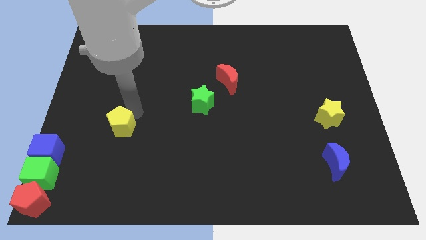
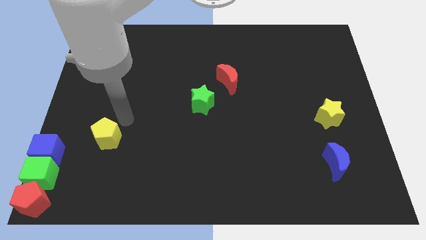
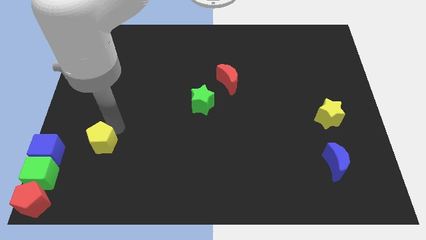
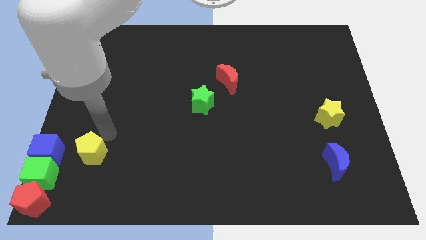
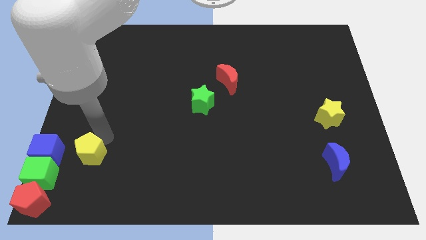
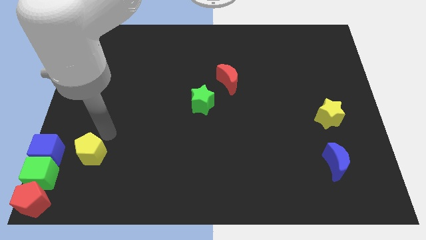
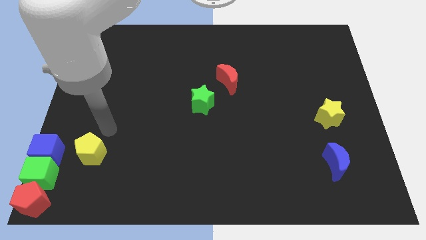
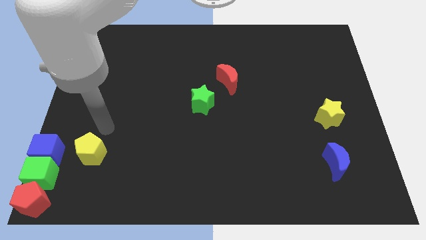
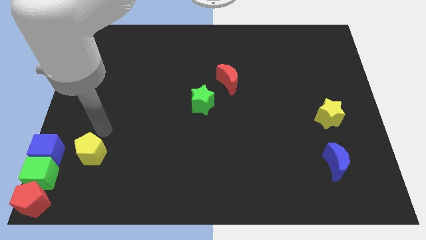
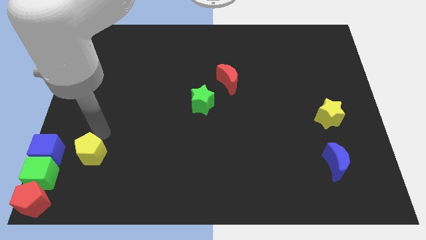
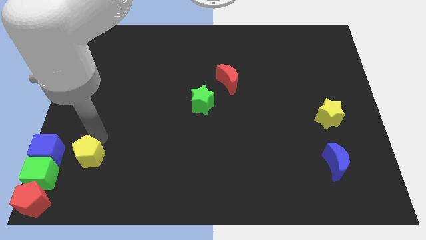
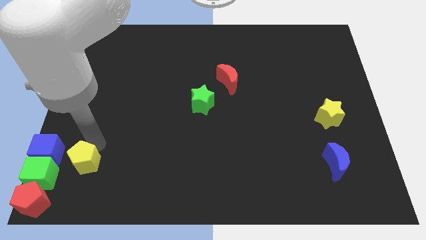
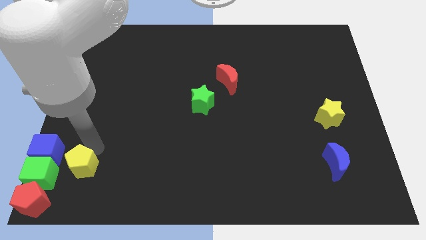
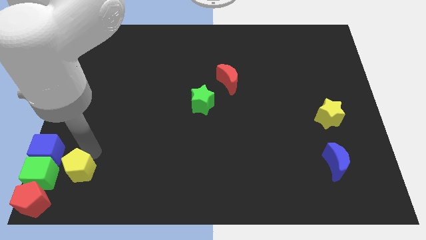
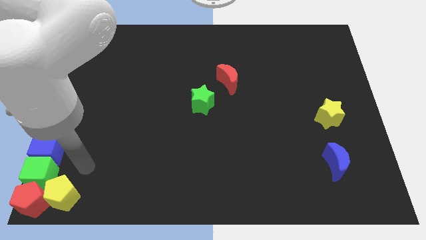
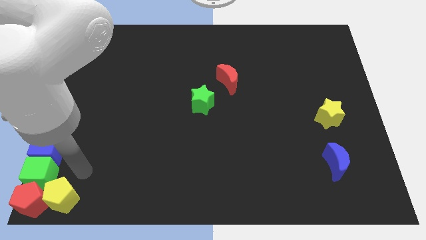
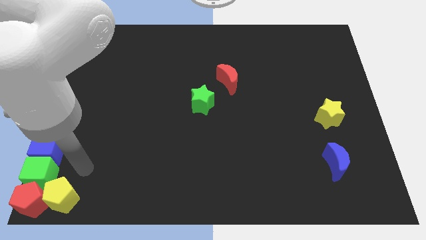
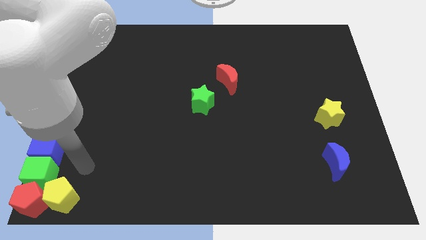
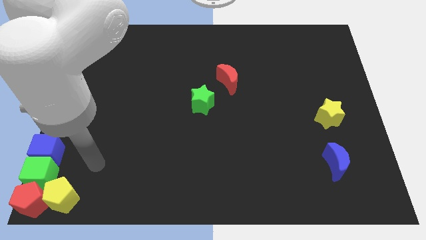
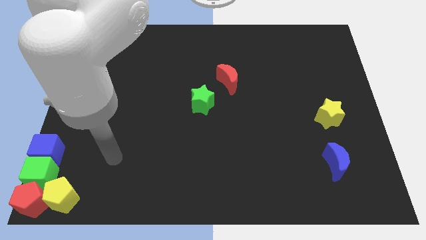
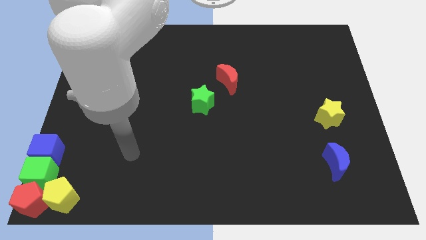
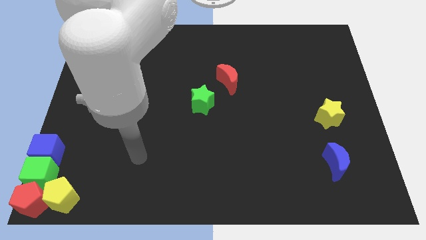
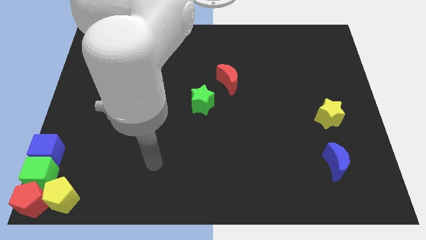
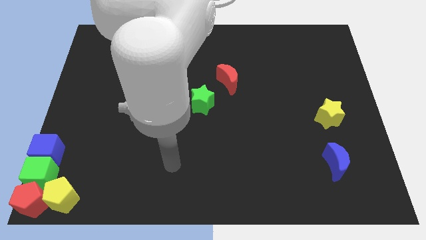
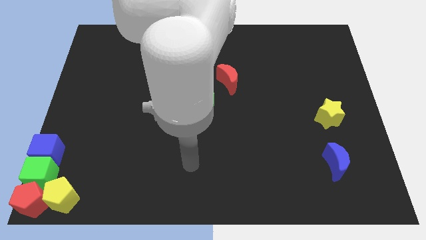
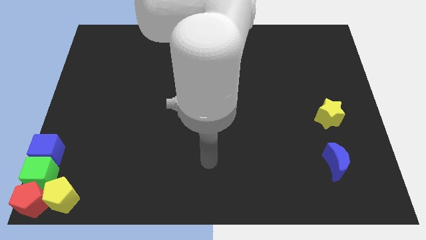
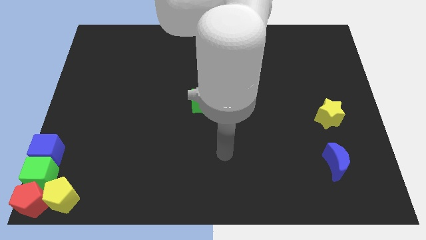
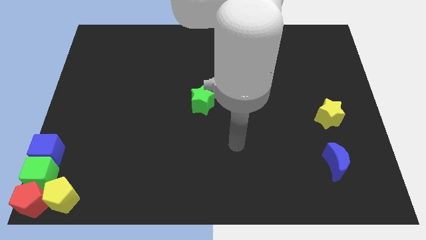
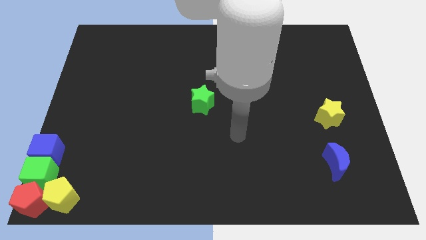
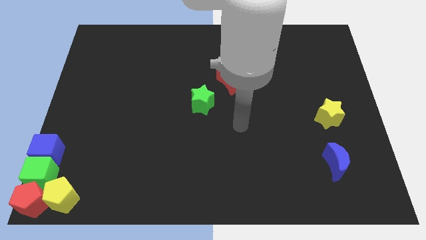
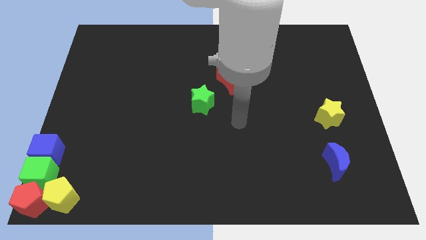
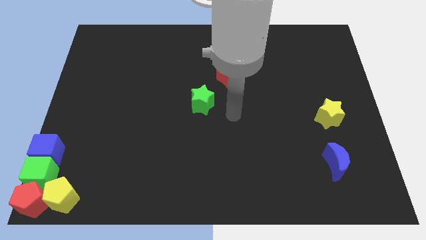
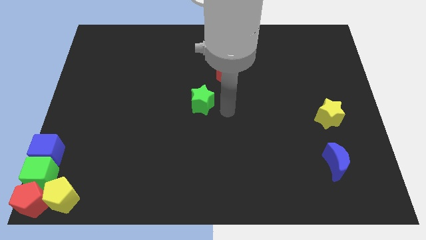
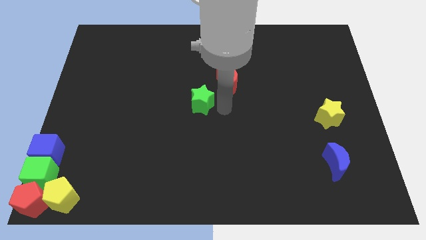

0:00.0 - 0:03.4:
push the yellow pentagon right to the red pentagon

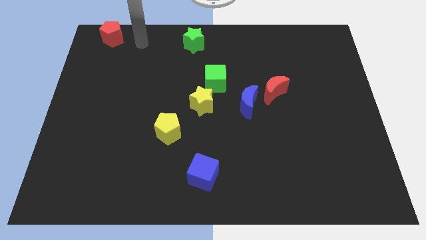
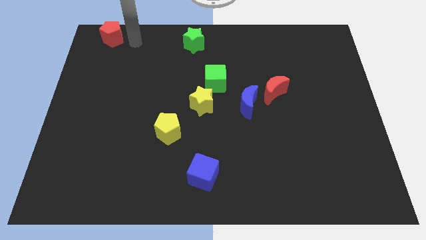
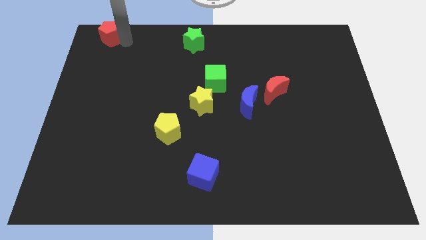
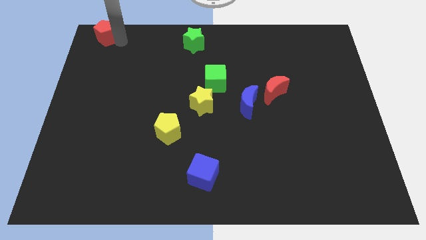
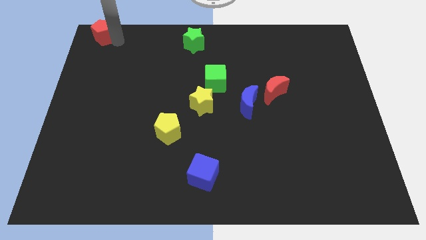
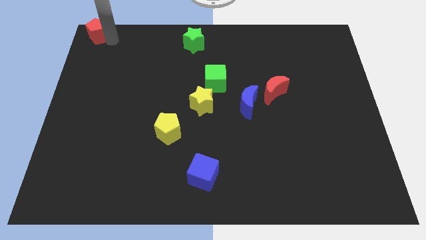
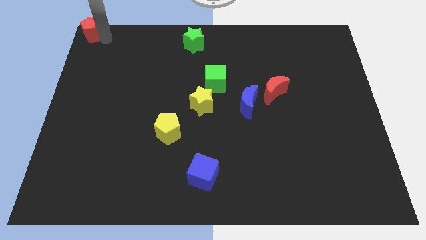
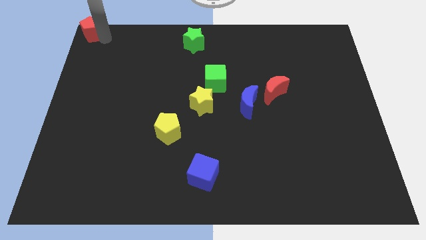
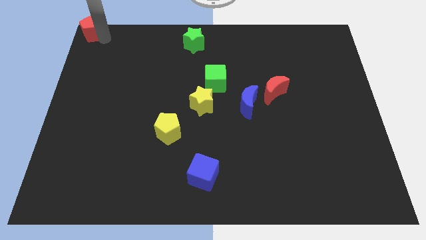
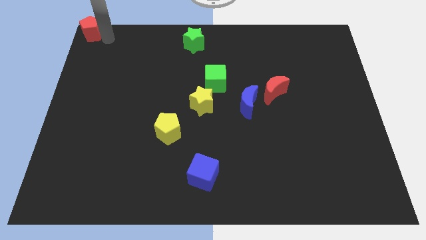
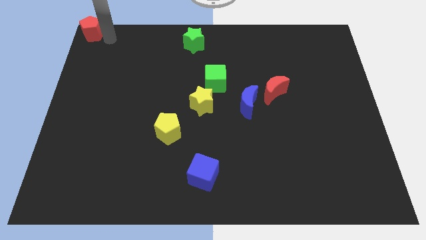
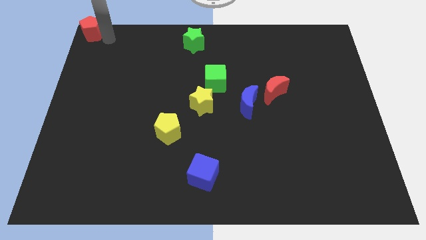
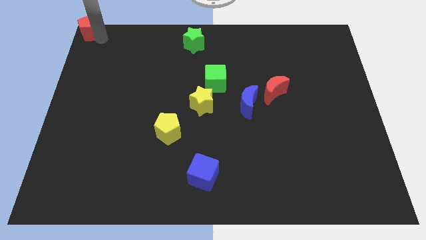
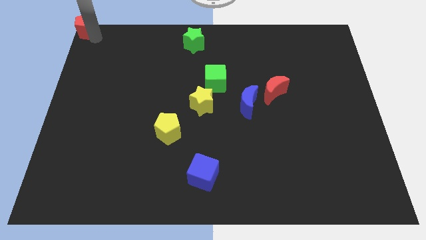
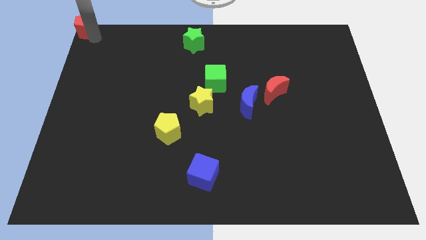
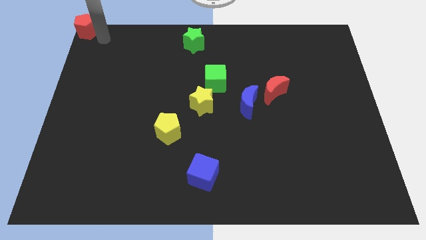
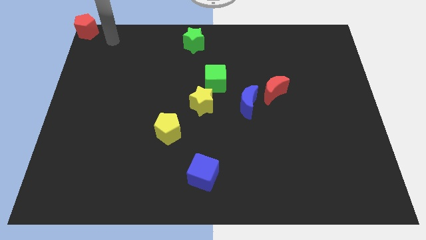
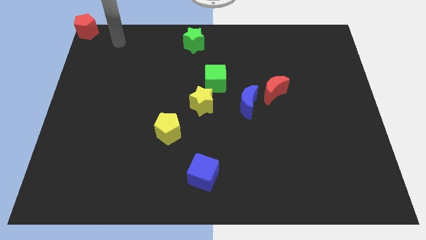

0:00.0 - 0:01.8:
put the red pentagon to the top left corner of the board

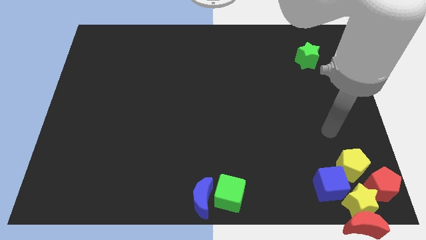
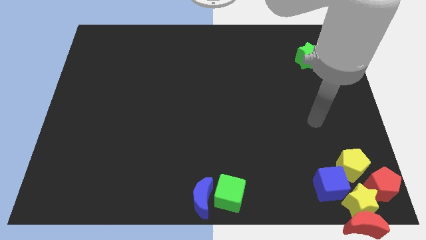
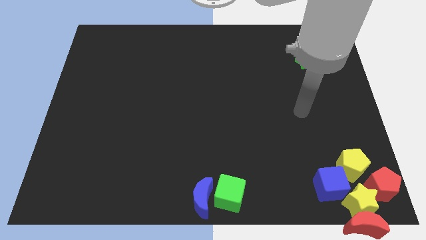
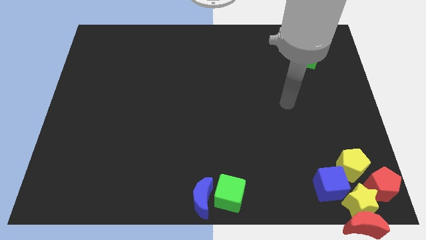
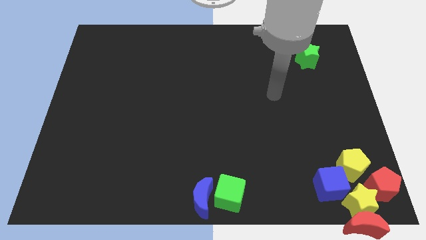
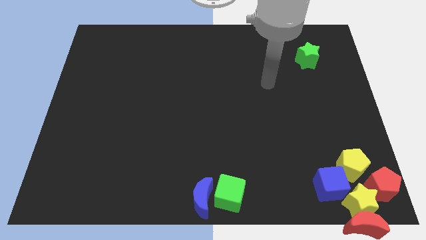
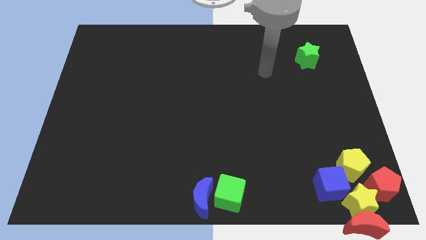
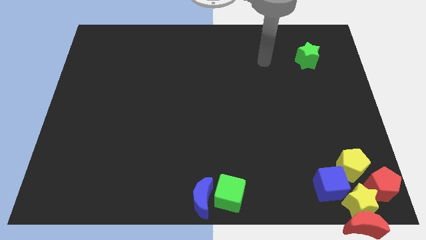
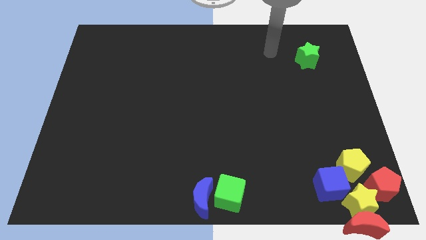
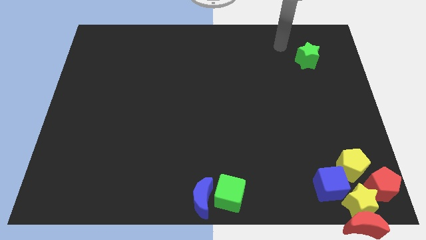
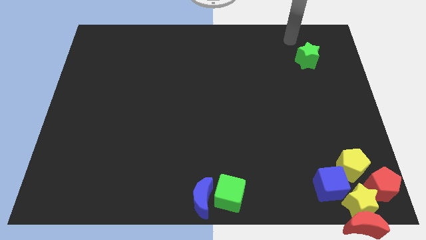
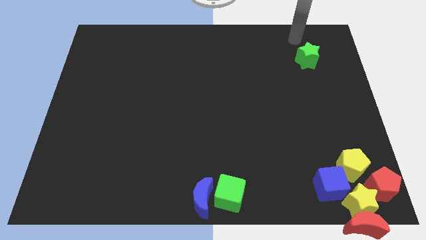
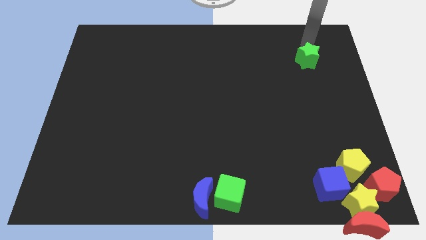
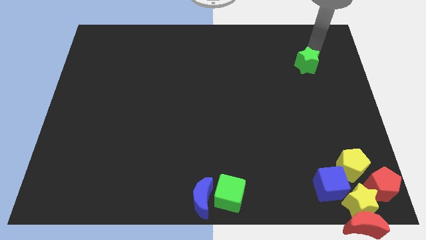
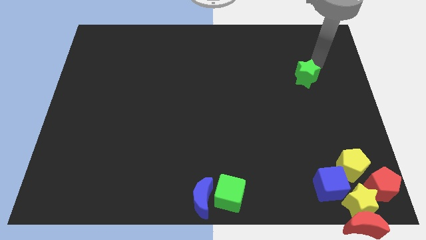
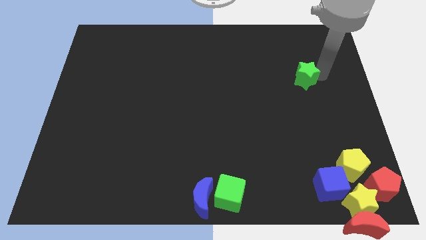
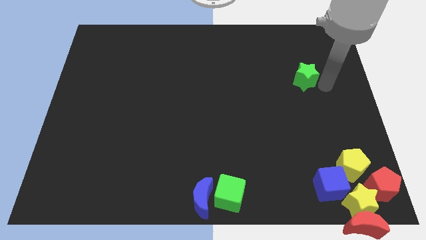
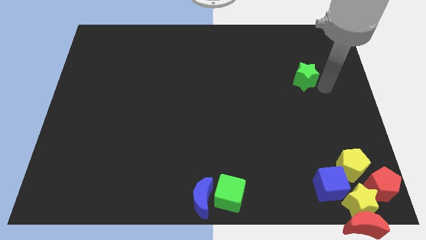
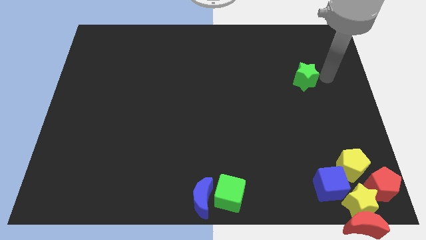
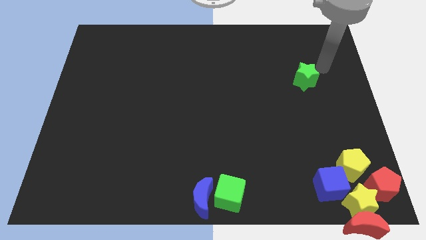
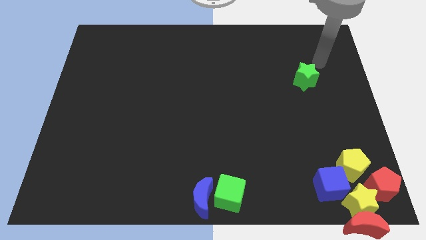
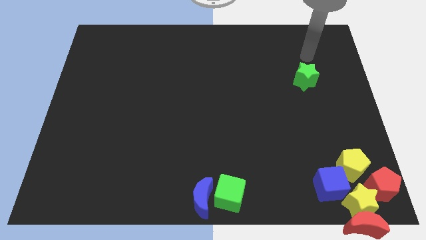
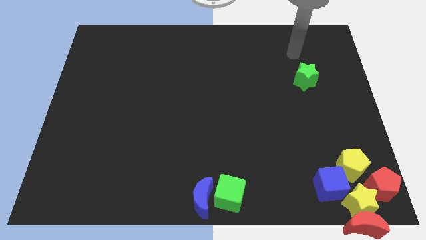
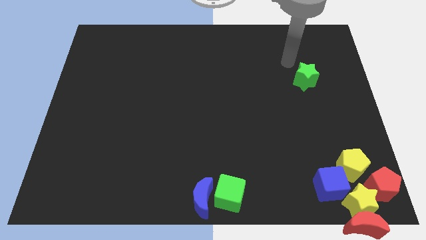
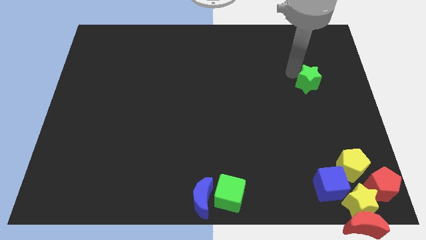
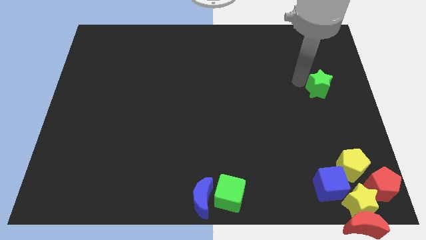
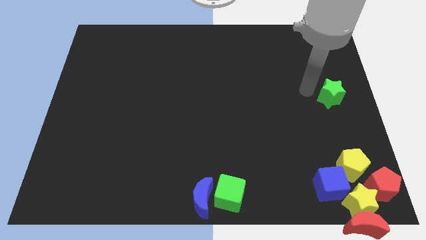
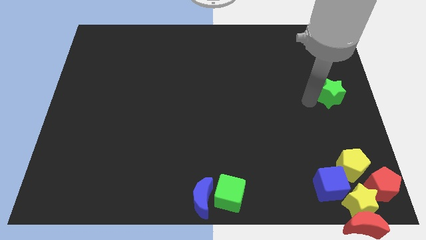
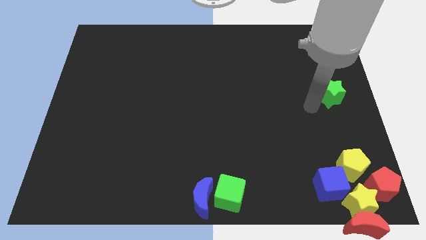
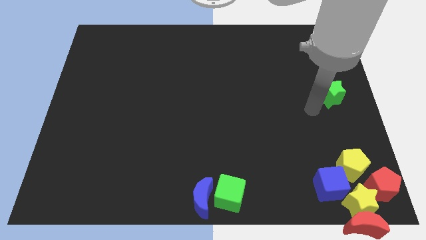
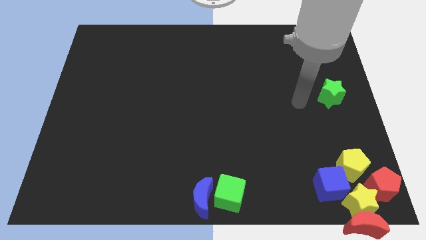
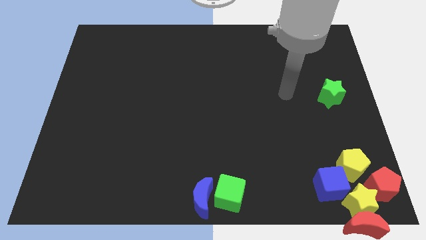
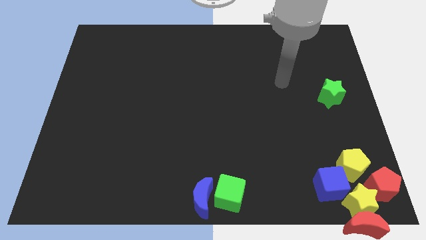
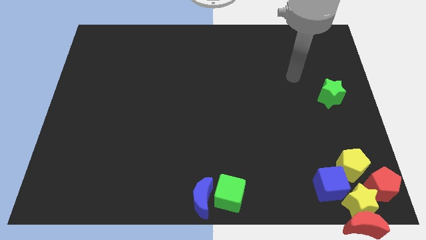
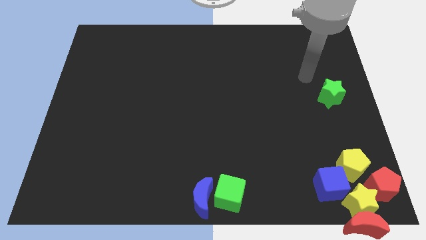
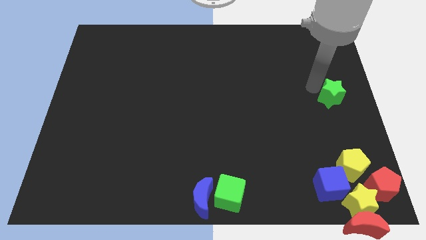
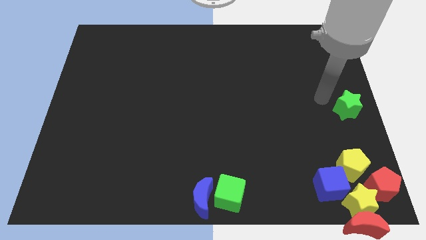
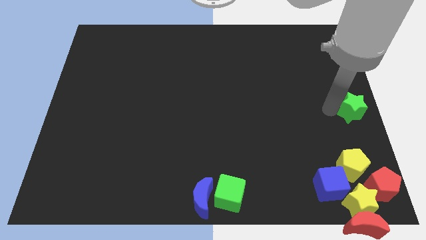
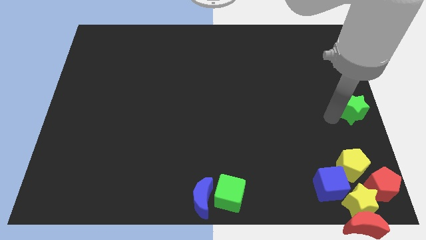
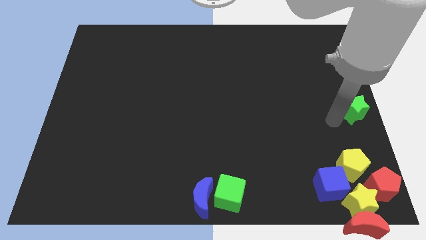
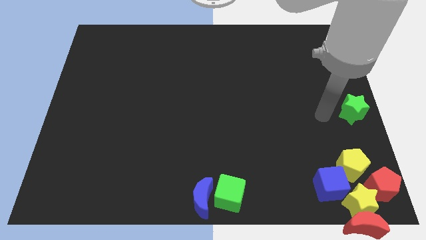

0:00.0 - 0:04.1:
place the green star at the right center of the board
